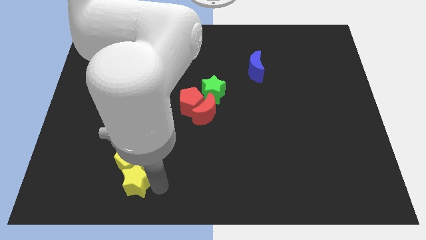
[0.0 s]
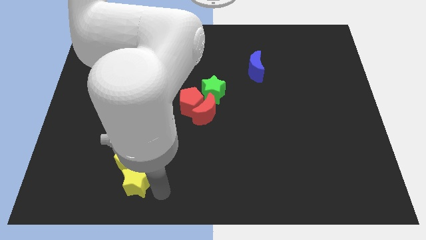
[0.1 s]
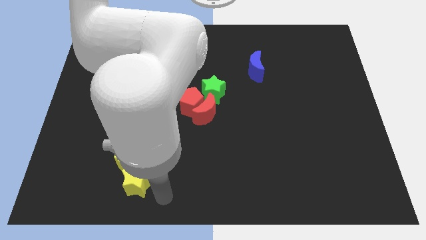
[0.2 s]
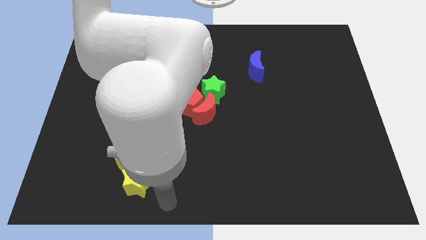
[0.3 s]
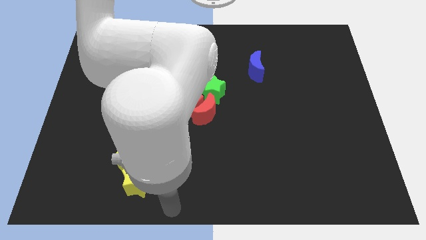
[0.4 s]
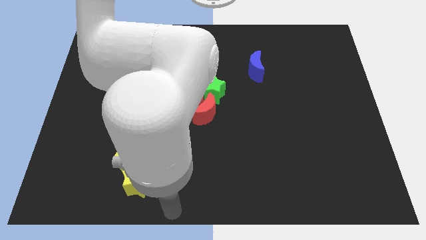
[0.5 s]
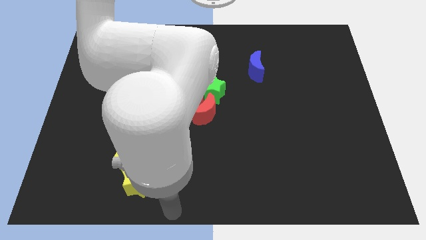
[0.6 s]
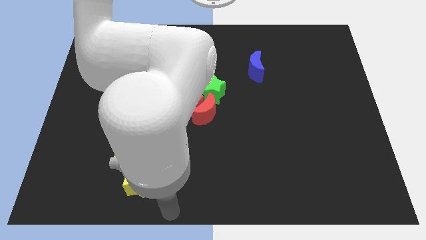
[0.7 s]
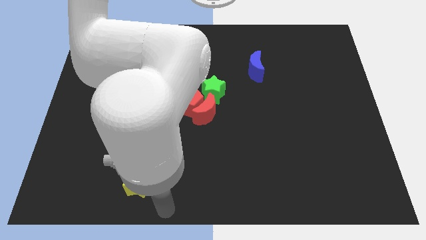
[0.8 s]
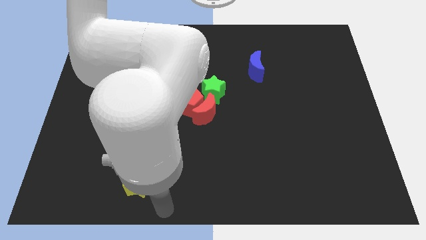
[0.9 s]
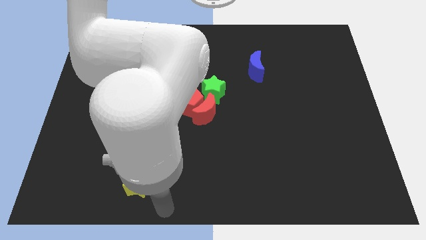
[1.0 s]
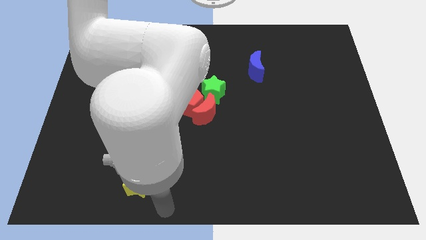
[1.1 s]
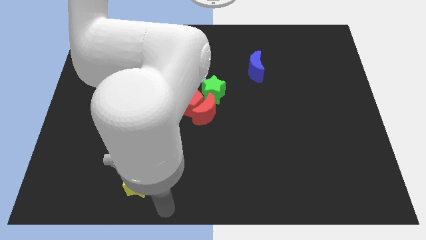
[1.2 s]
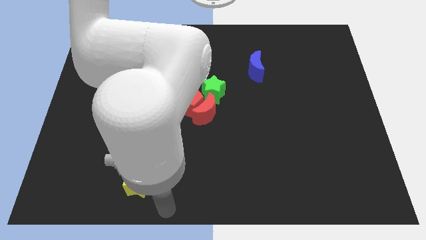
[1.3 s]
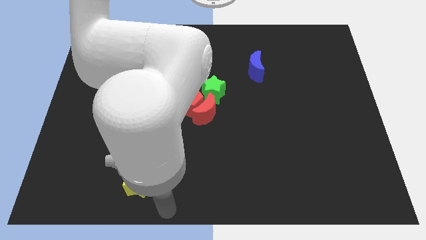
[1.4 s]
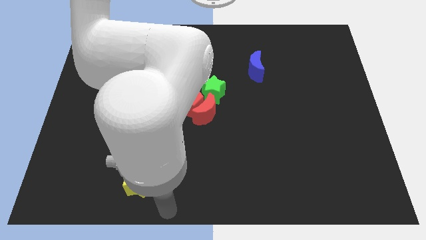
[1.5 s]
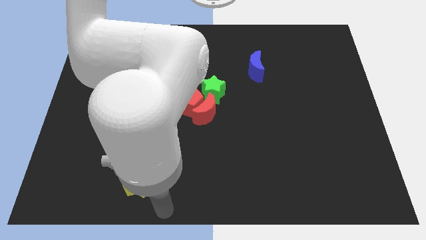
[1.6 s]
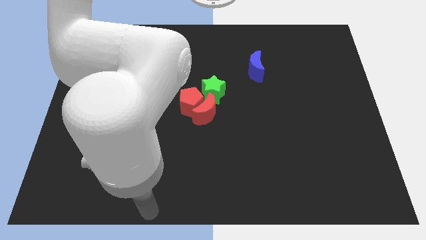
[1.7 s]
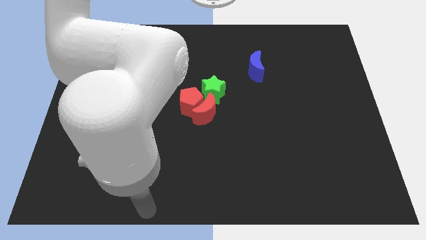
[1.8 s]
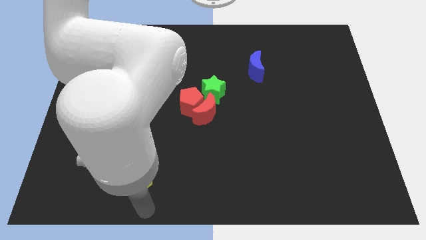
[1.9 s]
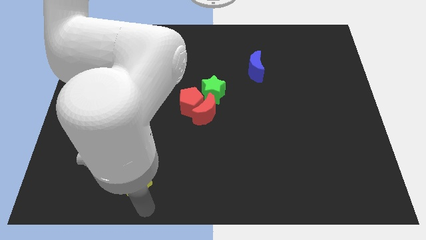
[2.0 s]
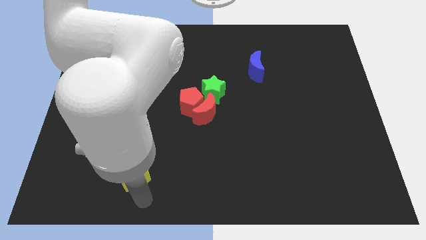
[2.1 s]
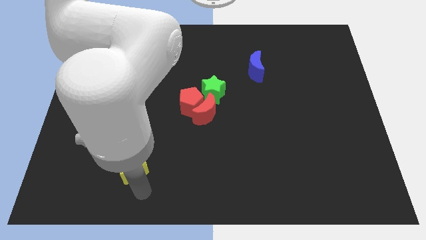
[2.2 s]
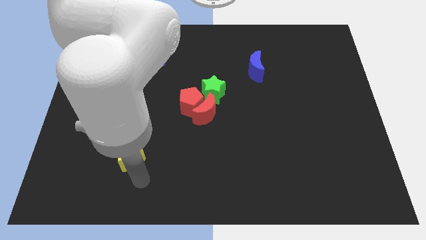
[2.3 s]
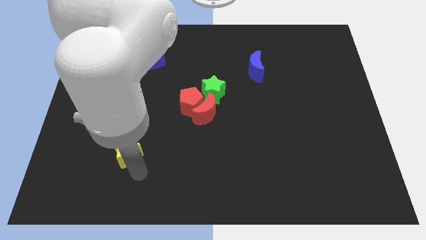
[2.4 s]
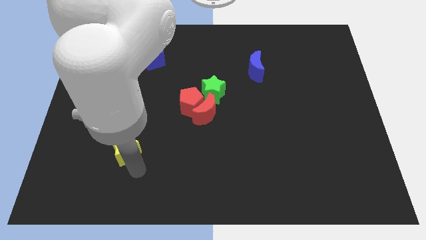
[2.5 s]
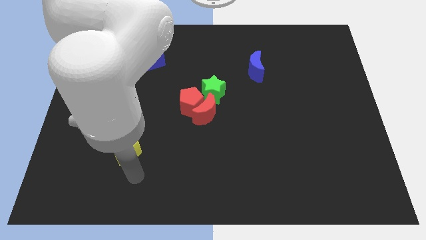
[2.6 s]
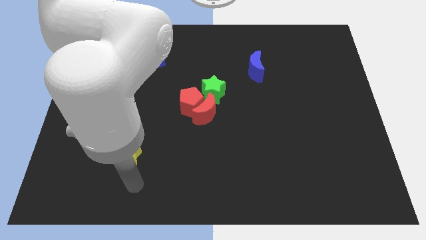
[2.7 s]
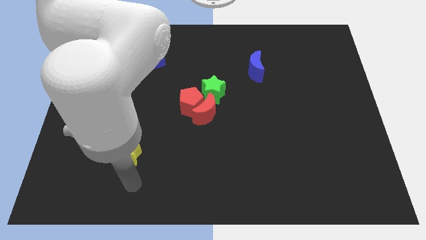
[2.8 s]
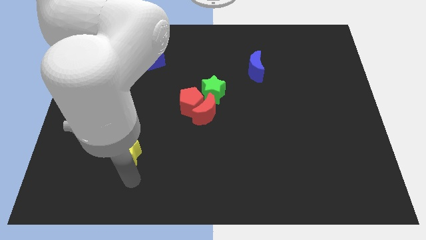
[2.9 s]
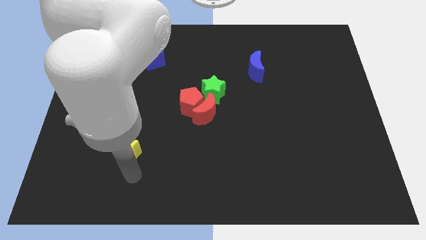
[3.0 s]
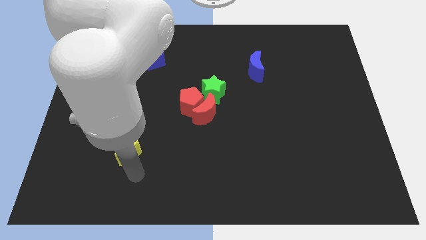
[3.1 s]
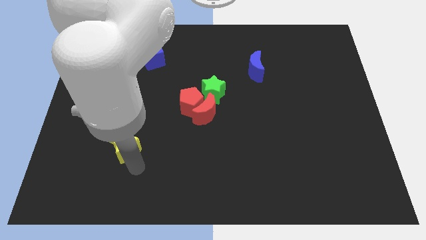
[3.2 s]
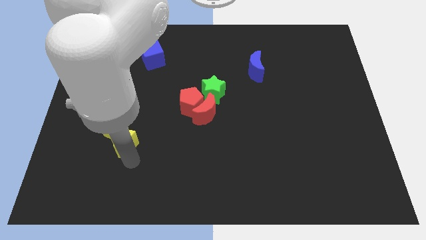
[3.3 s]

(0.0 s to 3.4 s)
push the yellow star and yellow pentagon towards the top side

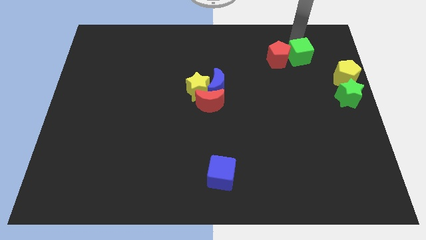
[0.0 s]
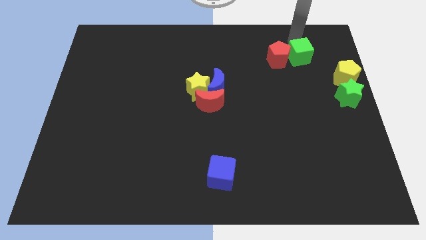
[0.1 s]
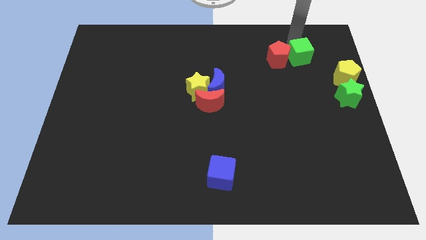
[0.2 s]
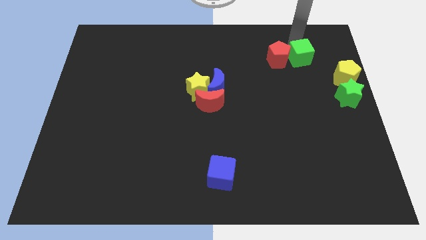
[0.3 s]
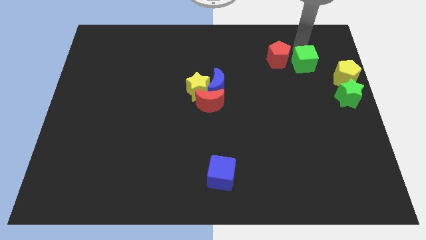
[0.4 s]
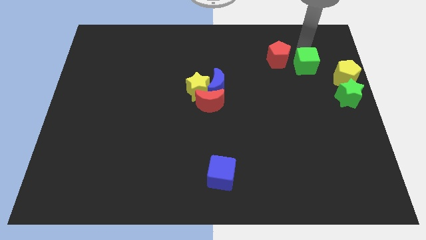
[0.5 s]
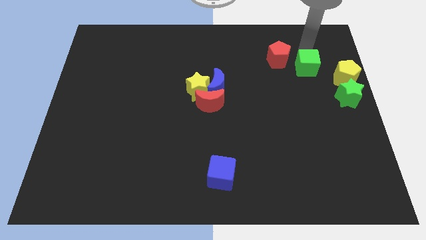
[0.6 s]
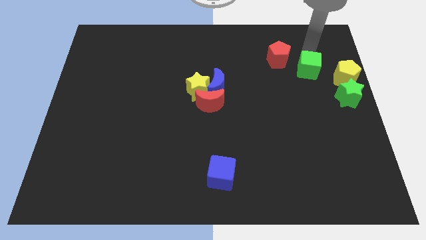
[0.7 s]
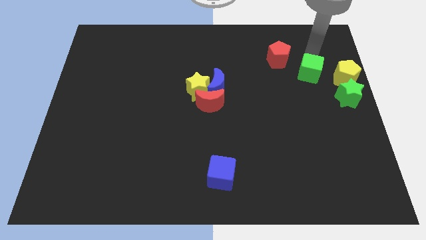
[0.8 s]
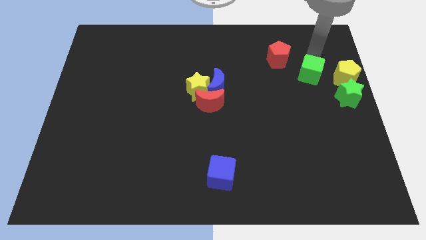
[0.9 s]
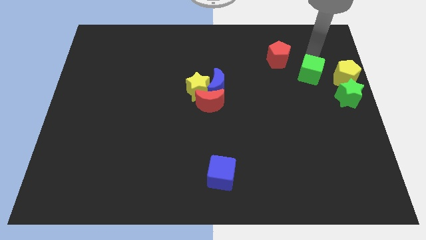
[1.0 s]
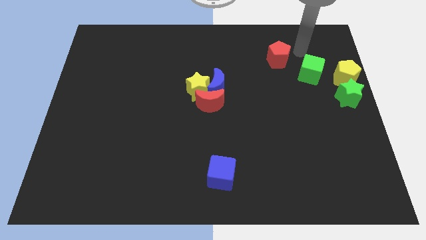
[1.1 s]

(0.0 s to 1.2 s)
drag the green cube slightly downwards

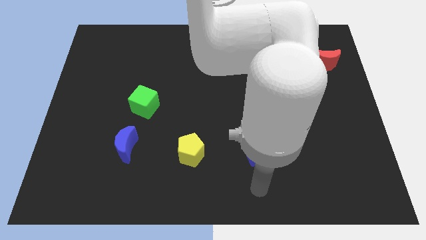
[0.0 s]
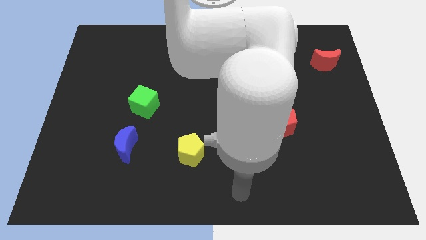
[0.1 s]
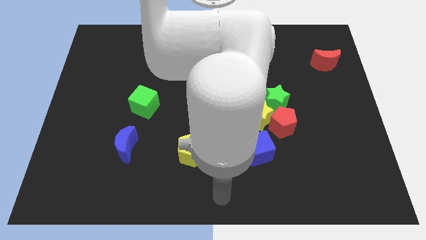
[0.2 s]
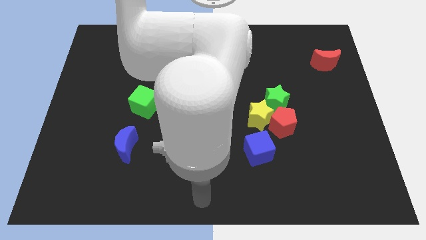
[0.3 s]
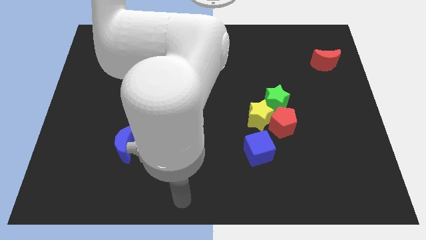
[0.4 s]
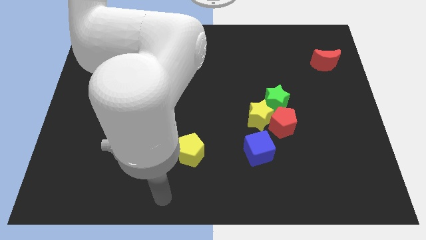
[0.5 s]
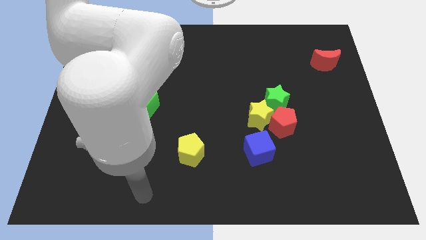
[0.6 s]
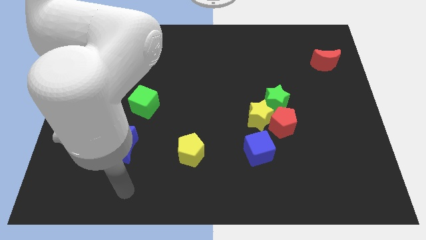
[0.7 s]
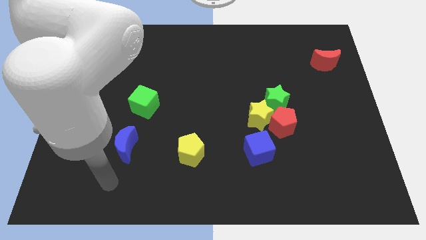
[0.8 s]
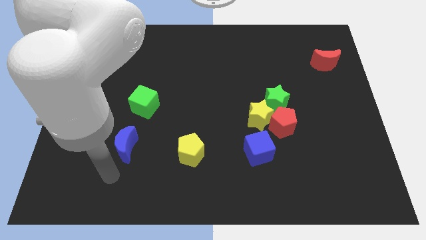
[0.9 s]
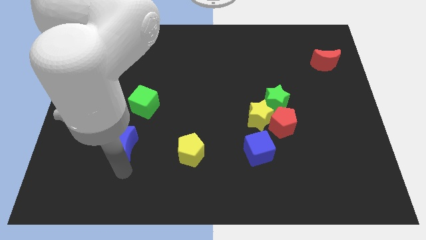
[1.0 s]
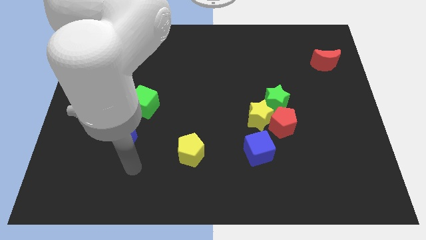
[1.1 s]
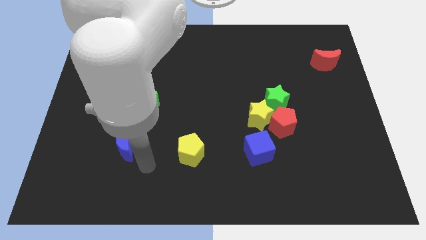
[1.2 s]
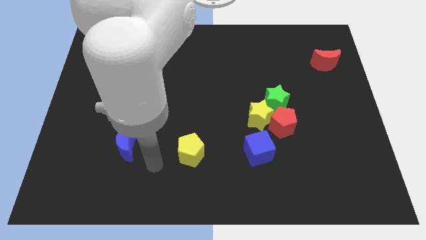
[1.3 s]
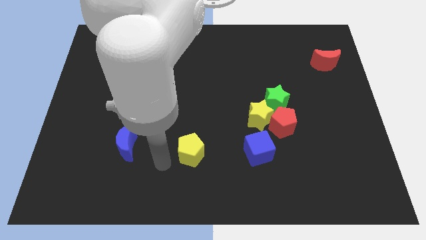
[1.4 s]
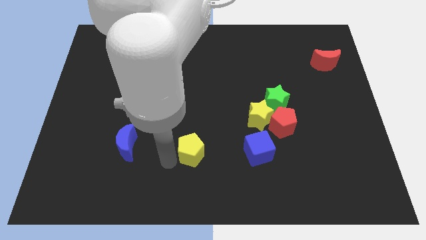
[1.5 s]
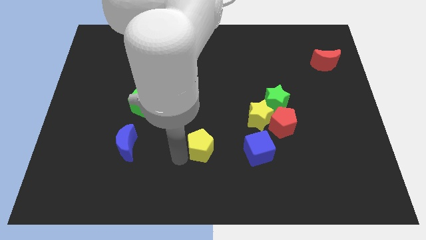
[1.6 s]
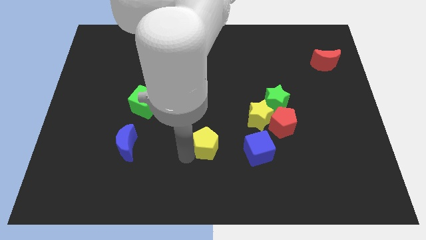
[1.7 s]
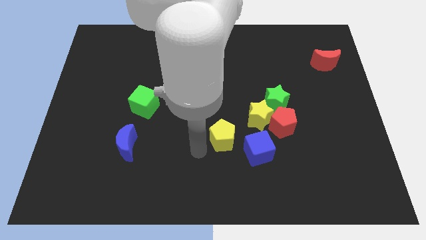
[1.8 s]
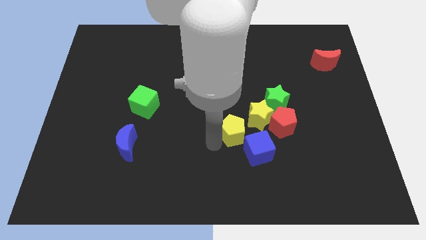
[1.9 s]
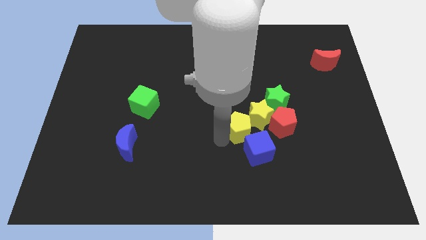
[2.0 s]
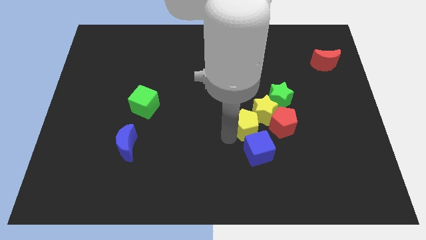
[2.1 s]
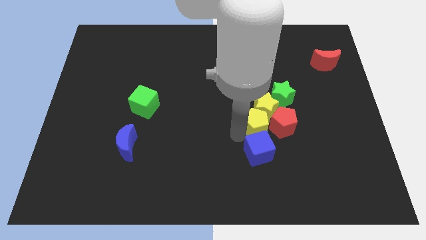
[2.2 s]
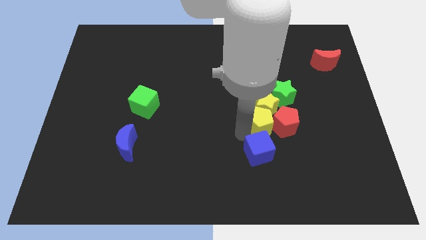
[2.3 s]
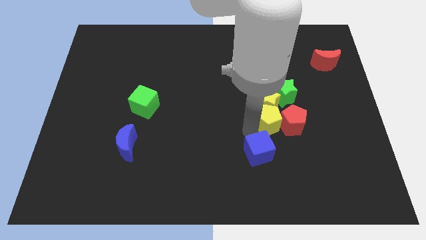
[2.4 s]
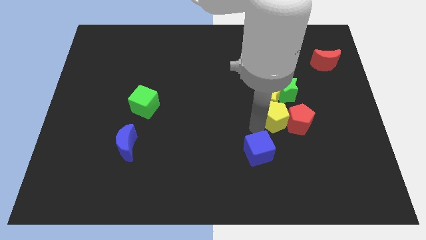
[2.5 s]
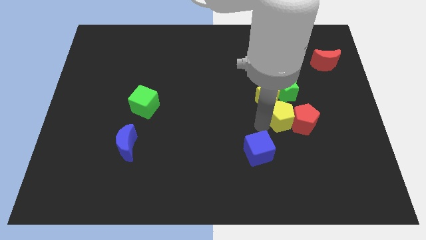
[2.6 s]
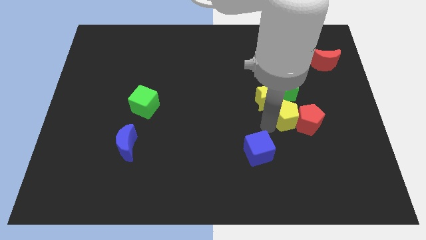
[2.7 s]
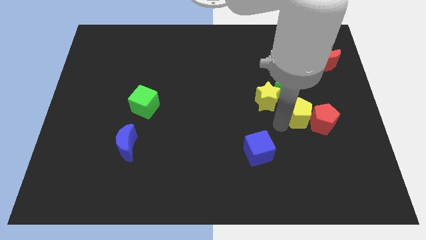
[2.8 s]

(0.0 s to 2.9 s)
move the yellow pentagon to the left side of the red pentagon

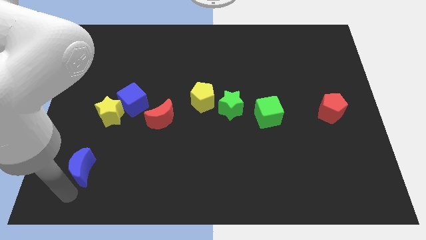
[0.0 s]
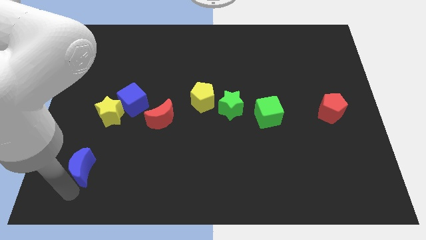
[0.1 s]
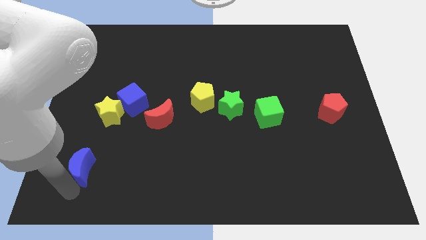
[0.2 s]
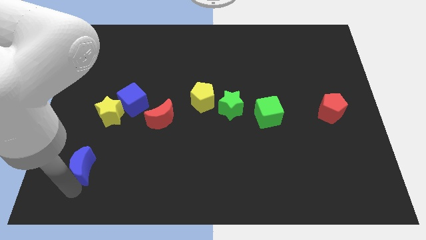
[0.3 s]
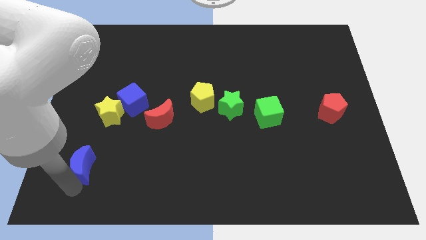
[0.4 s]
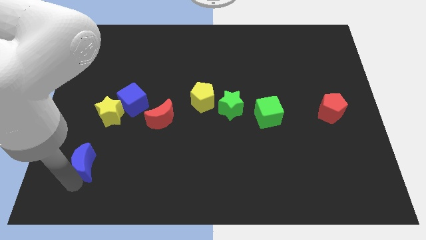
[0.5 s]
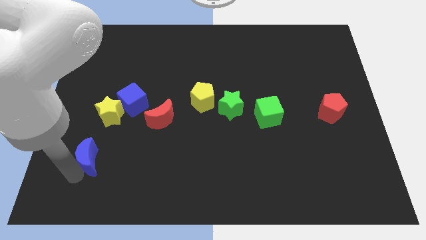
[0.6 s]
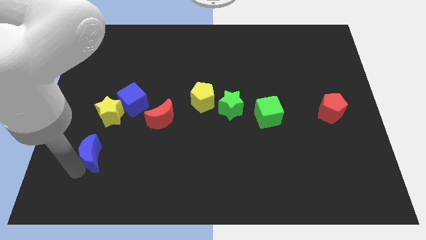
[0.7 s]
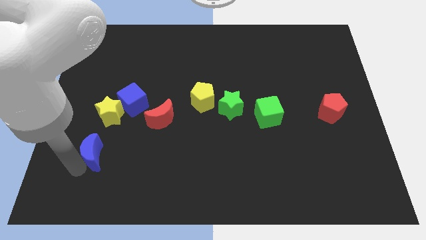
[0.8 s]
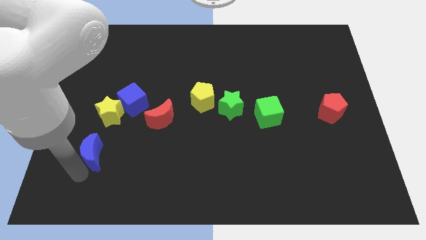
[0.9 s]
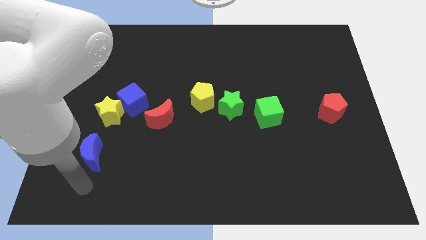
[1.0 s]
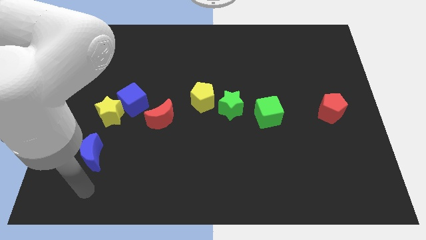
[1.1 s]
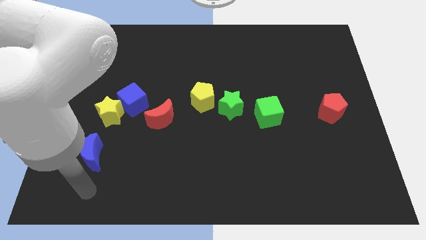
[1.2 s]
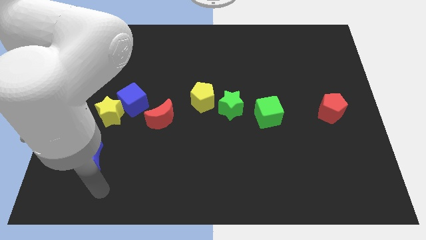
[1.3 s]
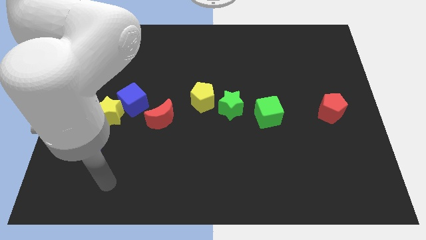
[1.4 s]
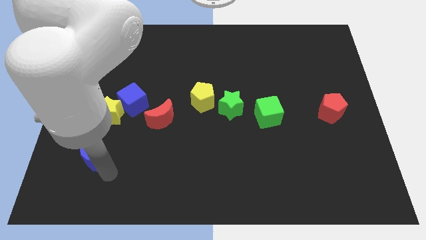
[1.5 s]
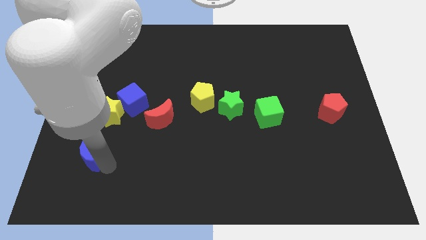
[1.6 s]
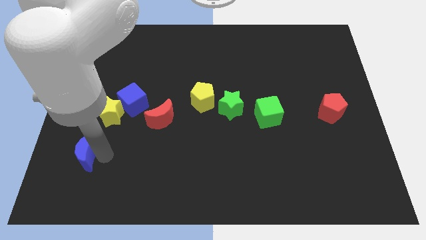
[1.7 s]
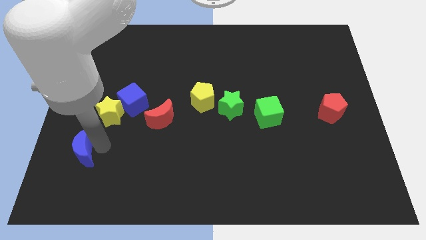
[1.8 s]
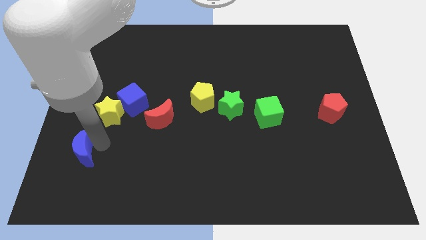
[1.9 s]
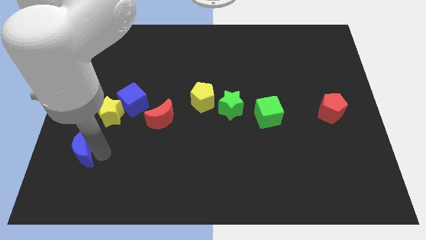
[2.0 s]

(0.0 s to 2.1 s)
move the blue moon slightly to the top of the board
